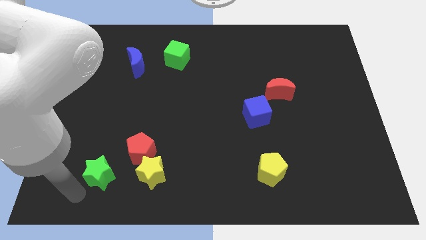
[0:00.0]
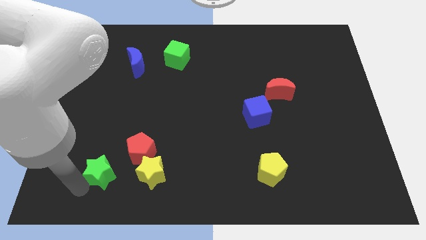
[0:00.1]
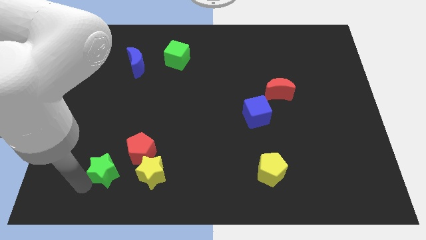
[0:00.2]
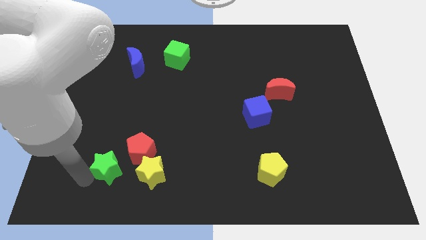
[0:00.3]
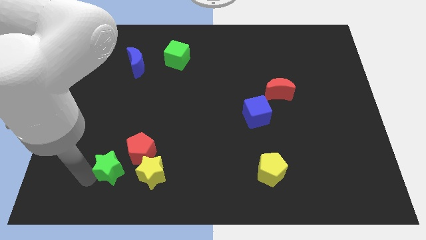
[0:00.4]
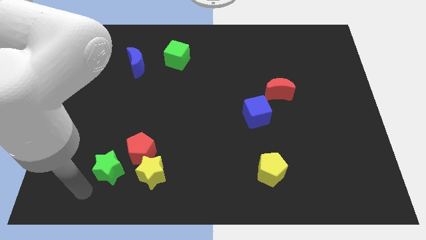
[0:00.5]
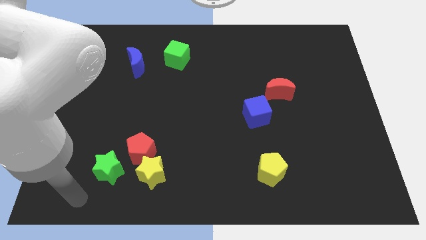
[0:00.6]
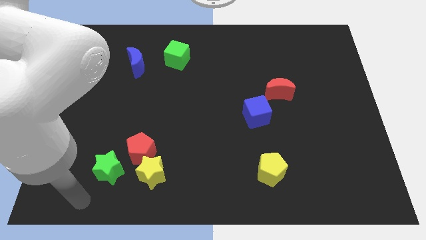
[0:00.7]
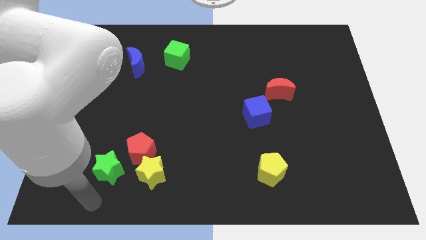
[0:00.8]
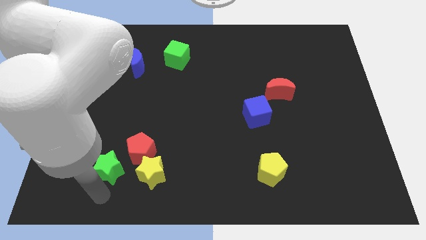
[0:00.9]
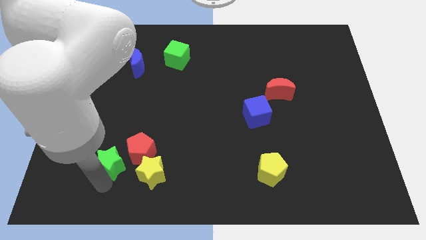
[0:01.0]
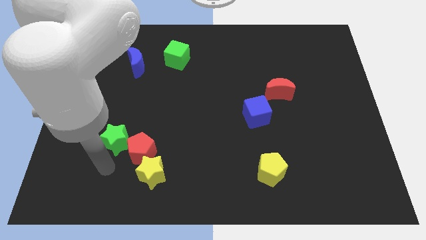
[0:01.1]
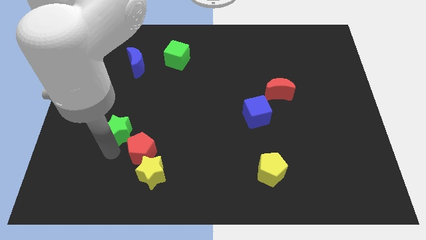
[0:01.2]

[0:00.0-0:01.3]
move green star to the top left of the red pentagon

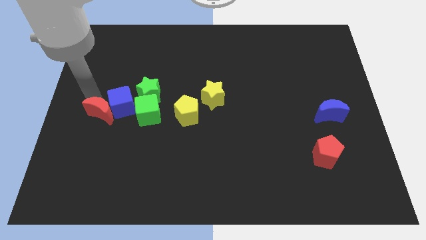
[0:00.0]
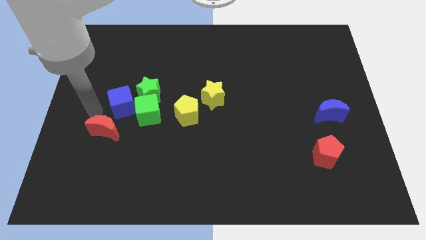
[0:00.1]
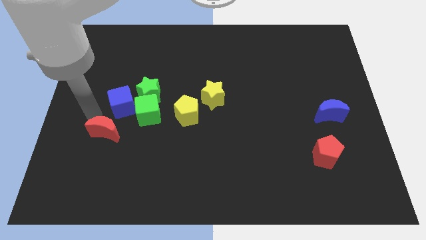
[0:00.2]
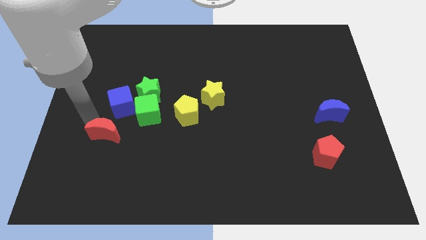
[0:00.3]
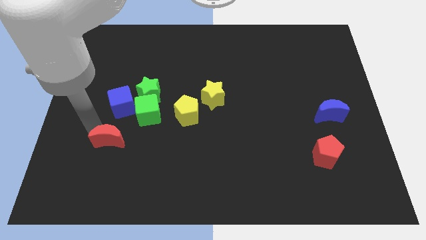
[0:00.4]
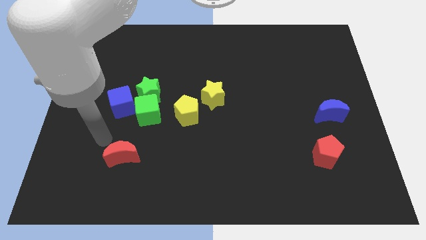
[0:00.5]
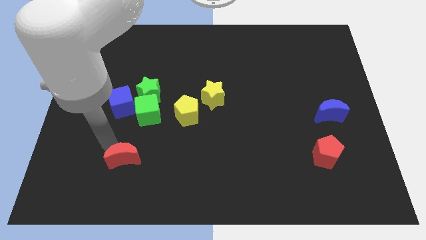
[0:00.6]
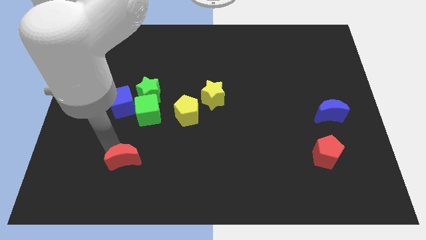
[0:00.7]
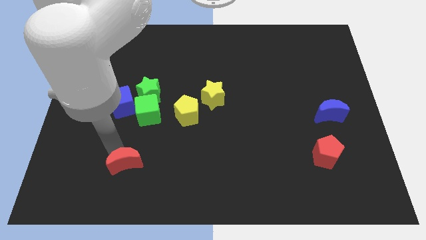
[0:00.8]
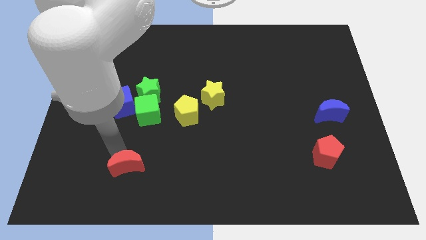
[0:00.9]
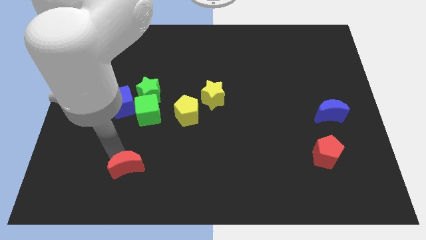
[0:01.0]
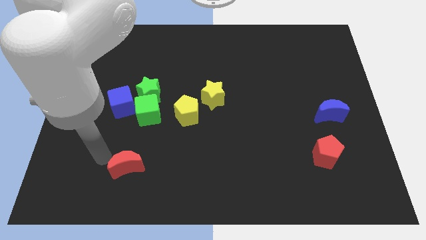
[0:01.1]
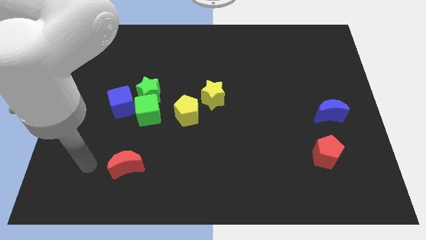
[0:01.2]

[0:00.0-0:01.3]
push the red crescent to the bottom of the blue cube

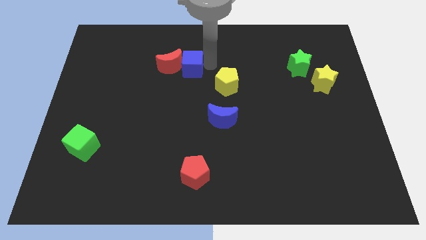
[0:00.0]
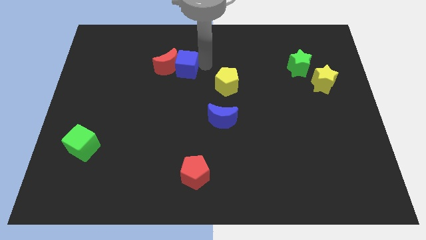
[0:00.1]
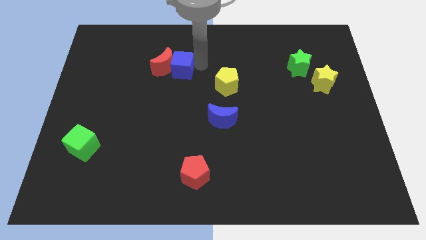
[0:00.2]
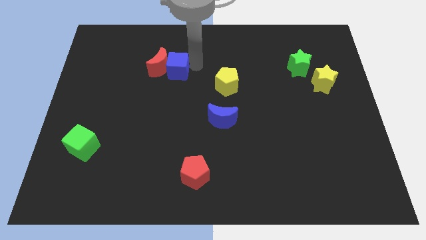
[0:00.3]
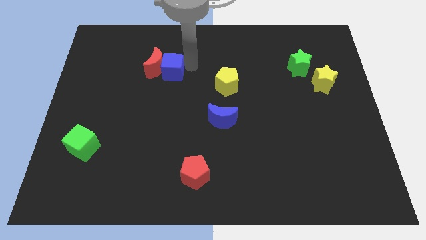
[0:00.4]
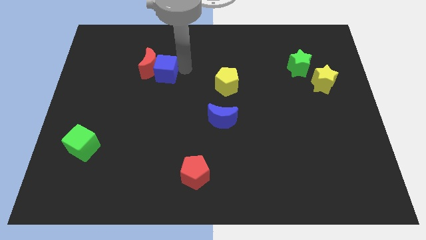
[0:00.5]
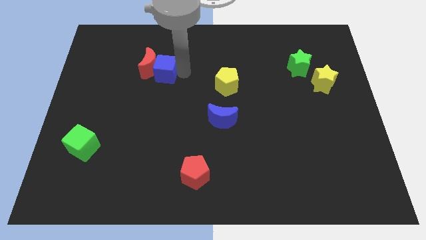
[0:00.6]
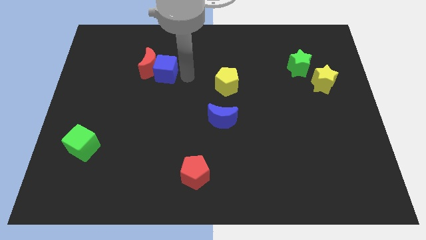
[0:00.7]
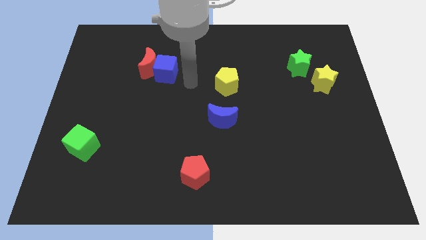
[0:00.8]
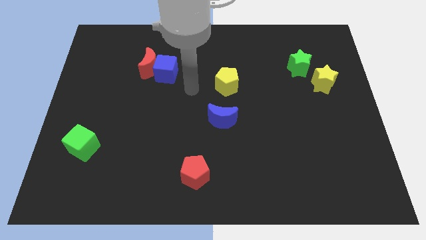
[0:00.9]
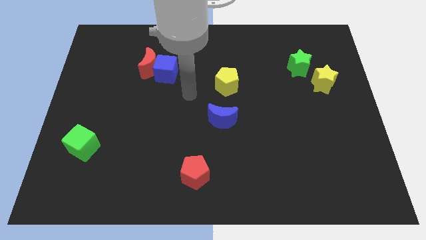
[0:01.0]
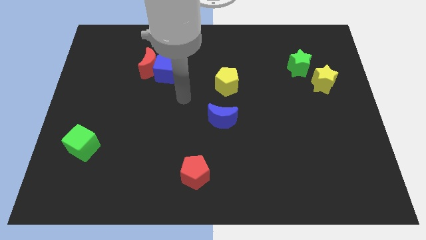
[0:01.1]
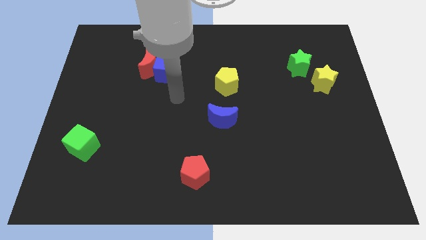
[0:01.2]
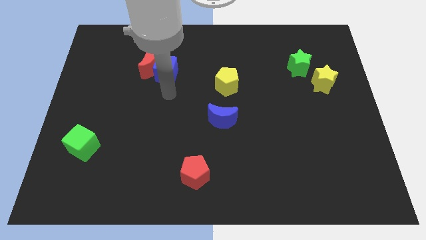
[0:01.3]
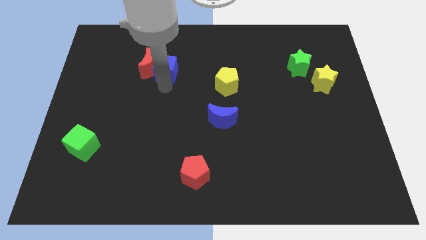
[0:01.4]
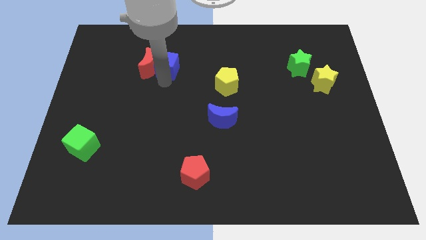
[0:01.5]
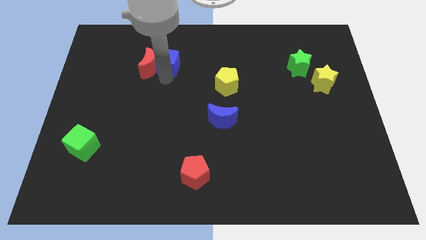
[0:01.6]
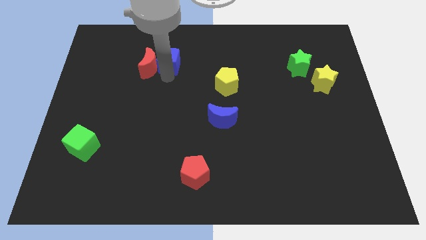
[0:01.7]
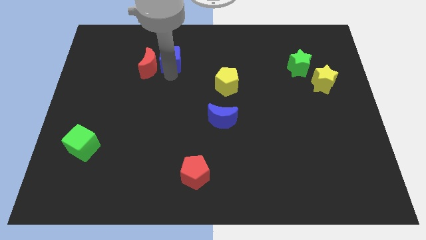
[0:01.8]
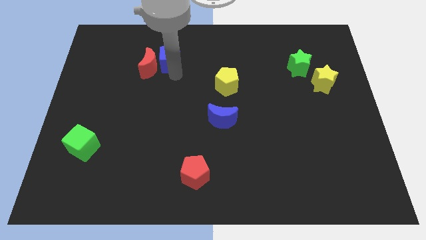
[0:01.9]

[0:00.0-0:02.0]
separate the blue cube from the red moon

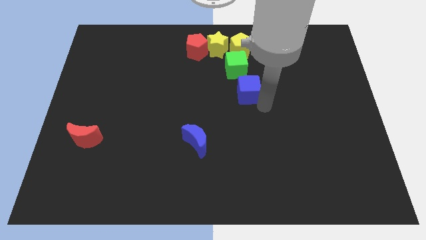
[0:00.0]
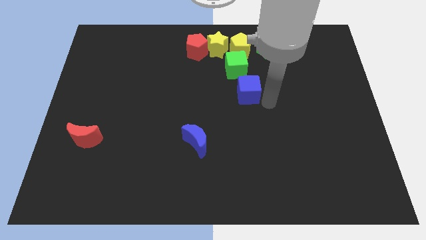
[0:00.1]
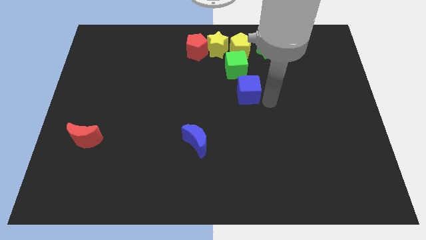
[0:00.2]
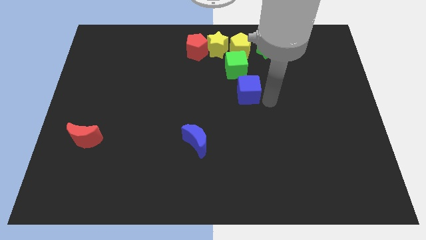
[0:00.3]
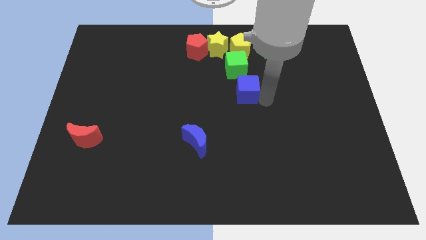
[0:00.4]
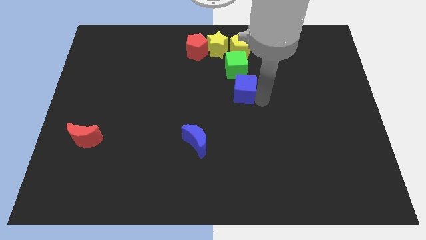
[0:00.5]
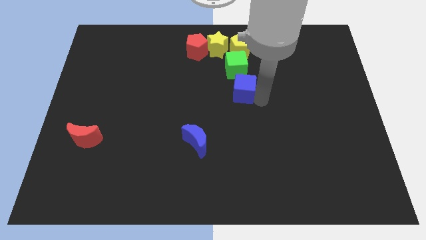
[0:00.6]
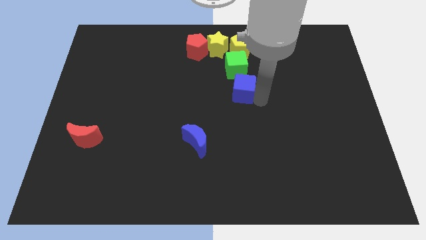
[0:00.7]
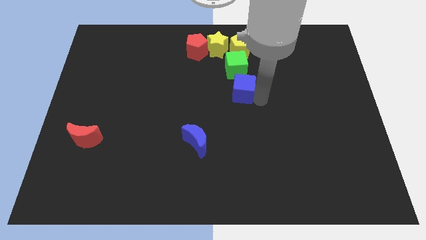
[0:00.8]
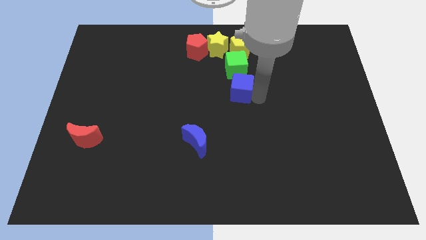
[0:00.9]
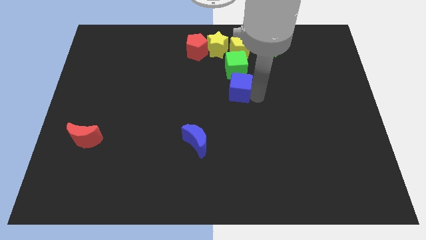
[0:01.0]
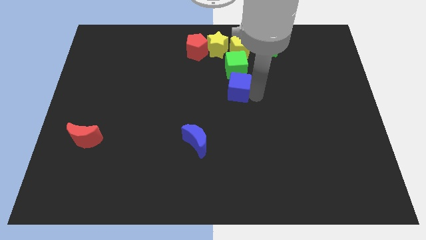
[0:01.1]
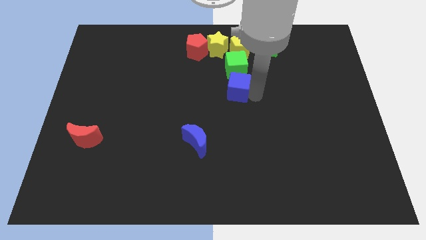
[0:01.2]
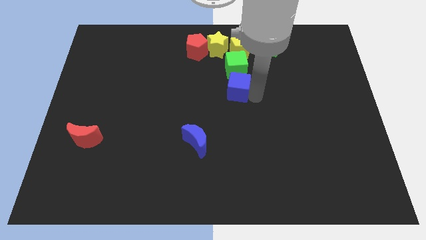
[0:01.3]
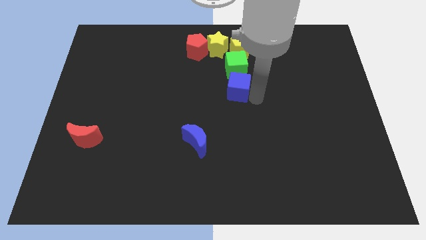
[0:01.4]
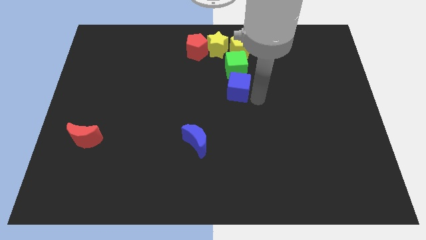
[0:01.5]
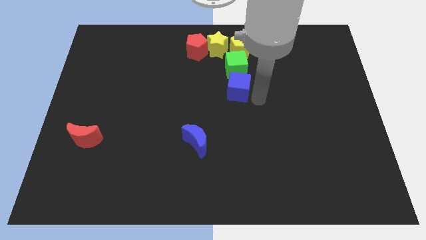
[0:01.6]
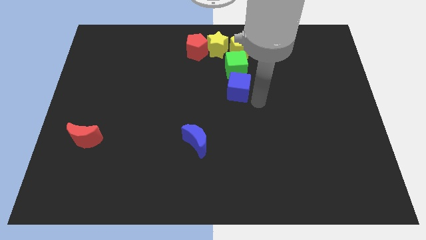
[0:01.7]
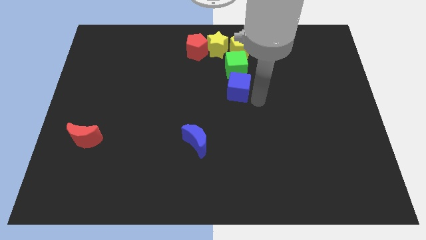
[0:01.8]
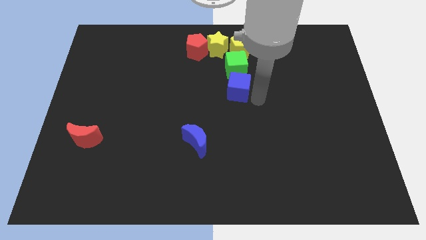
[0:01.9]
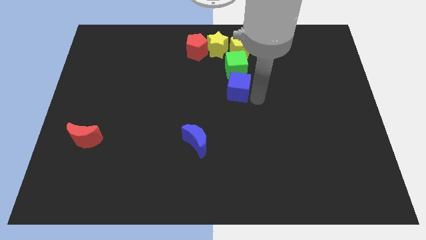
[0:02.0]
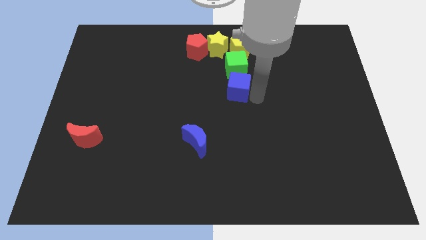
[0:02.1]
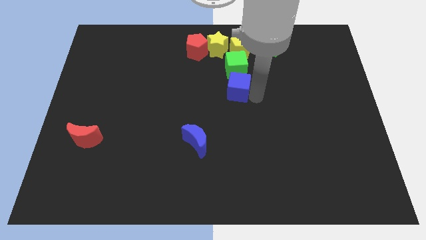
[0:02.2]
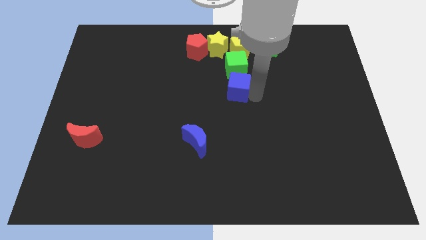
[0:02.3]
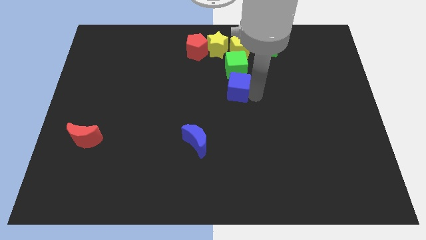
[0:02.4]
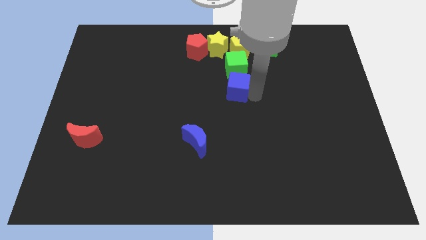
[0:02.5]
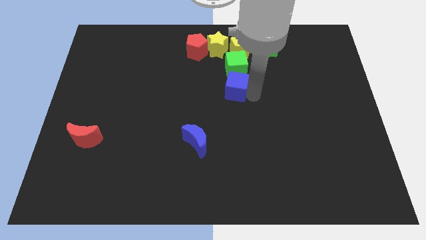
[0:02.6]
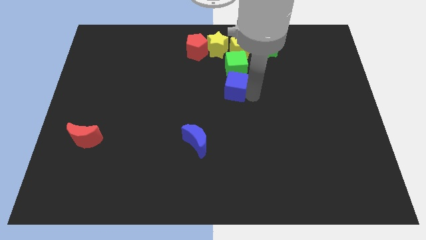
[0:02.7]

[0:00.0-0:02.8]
align the blue cube at the bottom of green cube

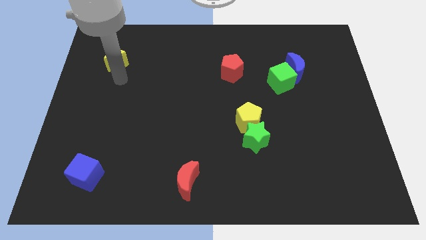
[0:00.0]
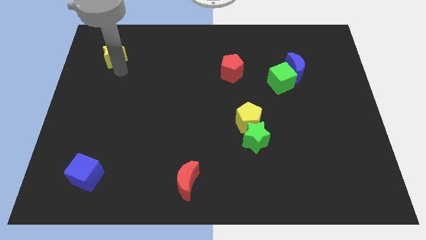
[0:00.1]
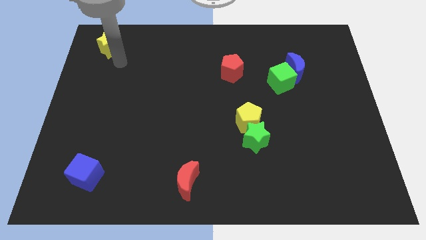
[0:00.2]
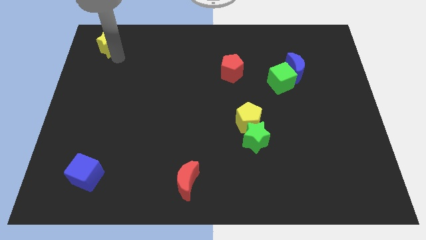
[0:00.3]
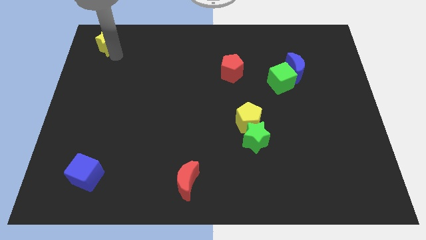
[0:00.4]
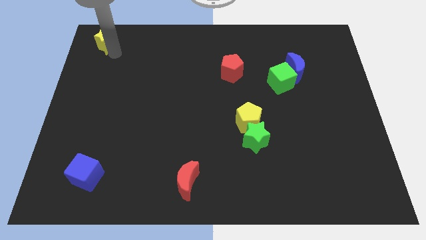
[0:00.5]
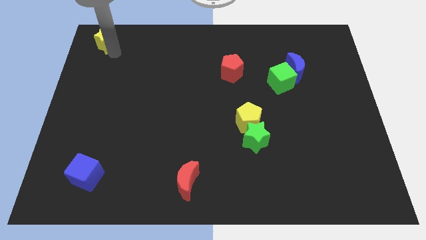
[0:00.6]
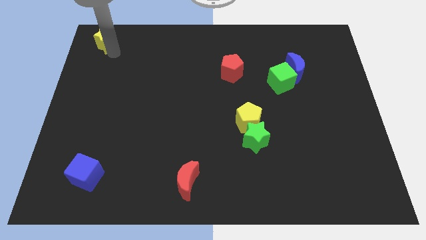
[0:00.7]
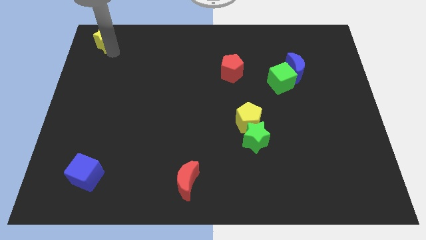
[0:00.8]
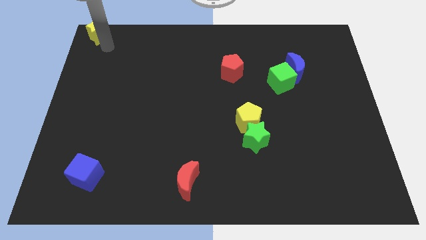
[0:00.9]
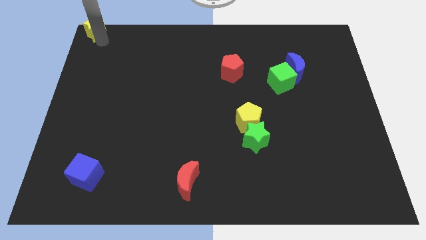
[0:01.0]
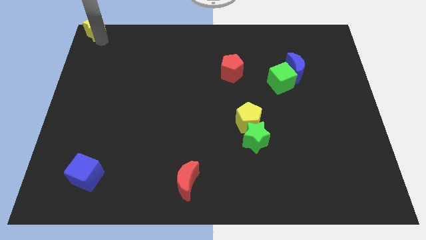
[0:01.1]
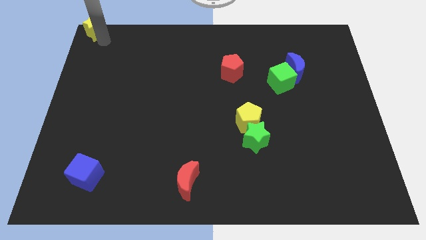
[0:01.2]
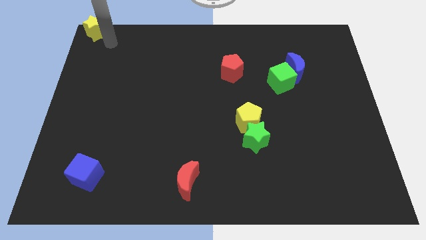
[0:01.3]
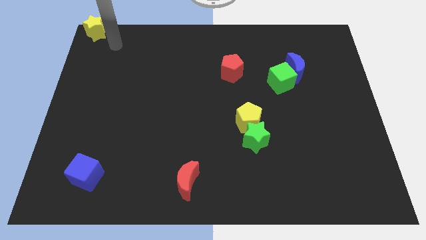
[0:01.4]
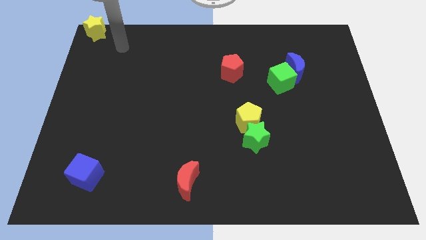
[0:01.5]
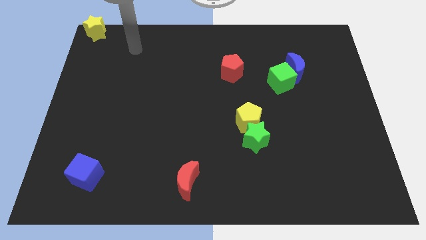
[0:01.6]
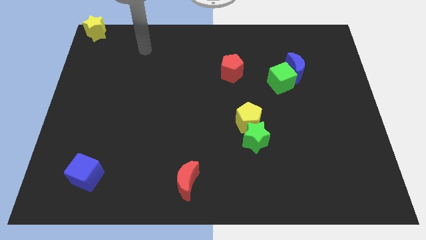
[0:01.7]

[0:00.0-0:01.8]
move the yellow star towards the top left corner of the board
